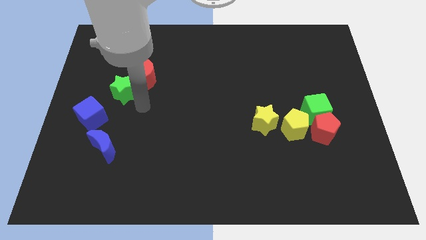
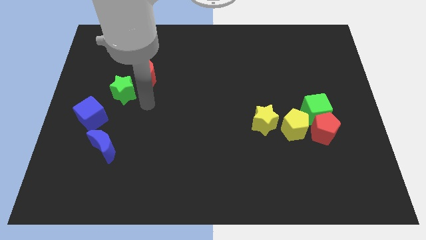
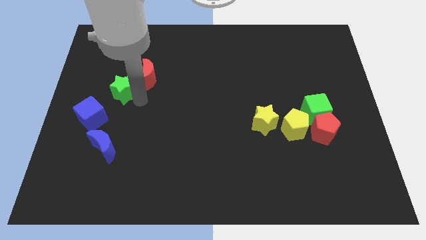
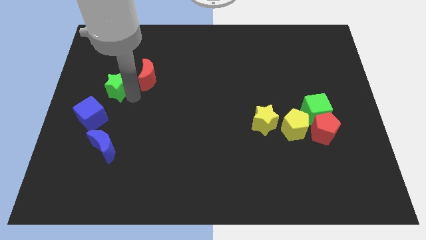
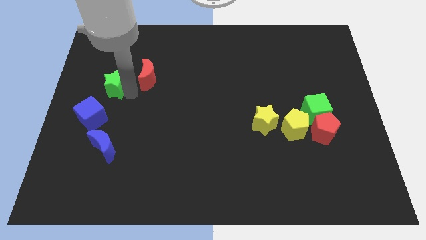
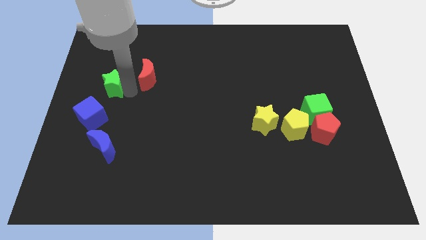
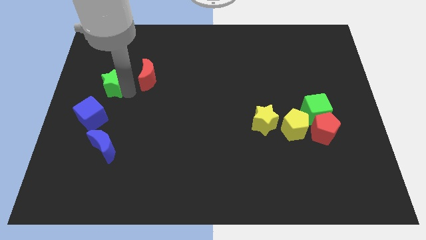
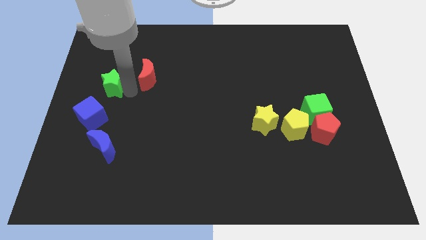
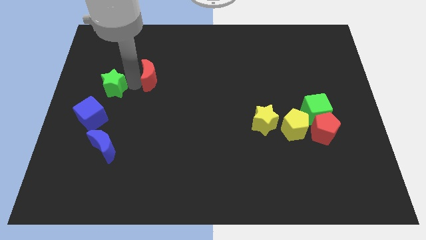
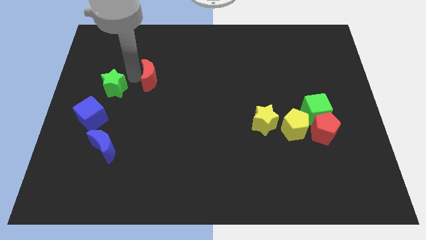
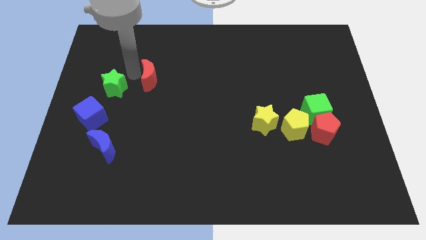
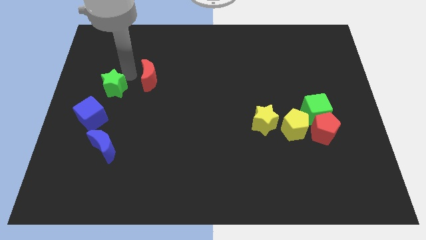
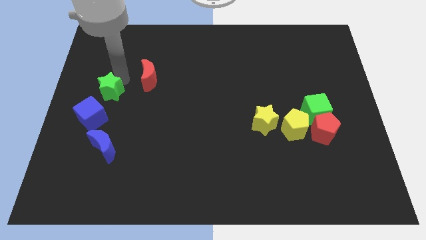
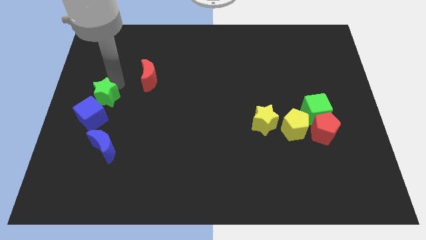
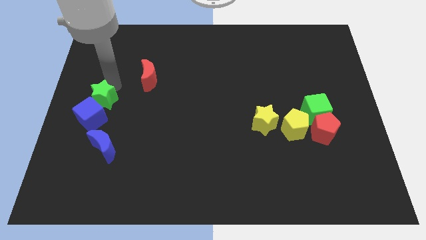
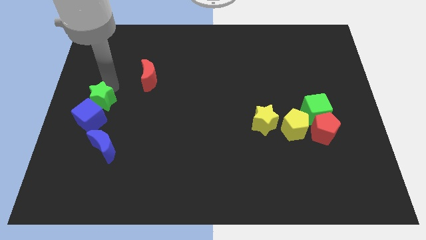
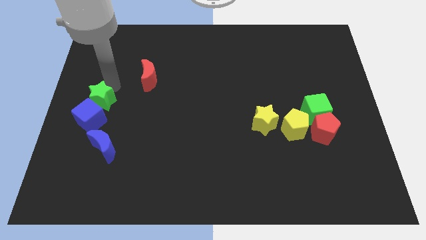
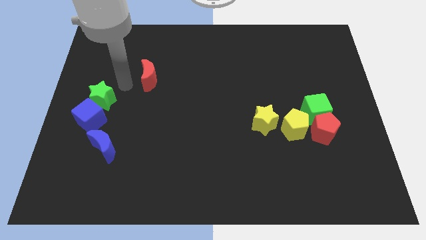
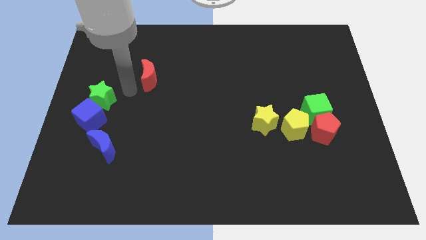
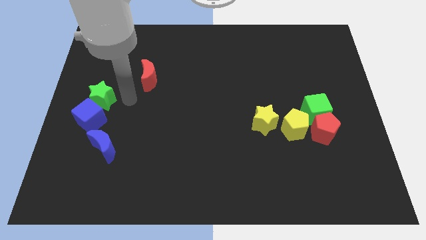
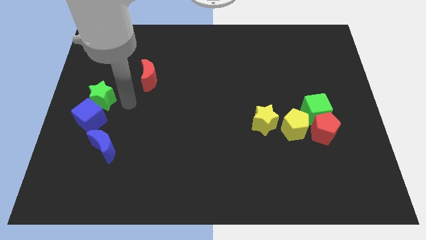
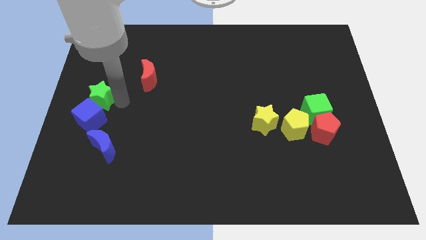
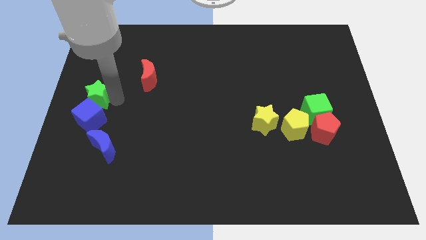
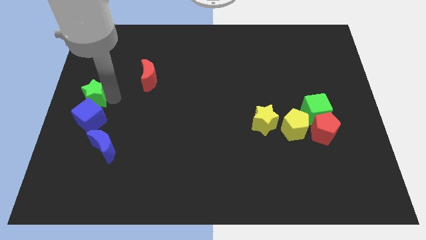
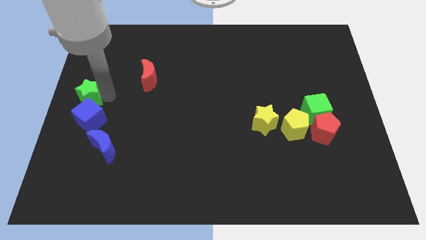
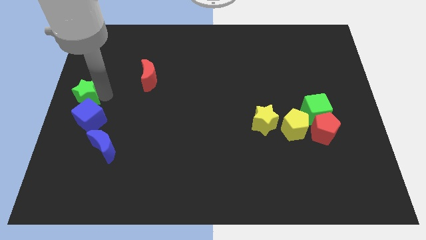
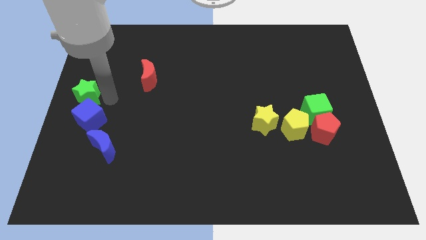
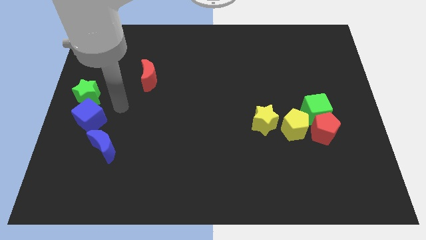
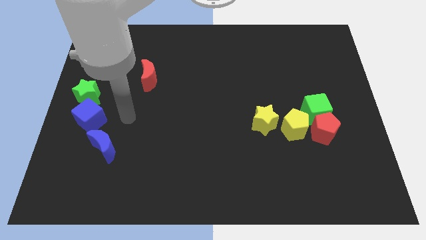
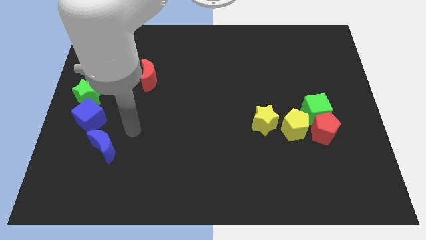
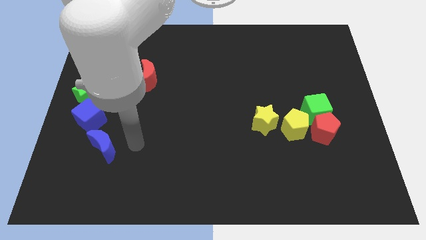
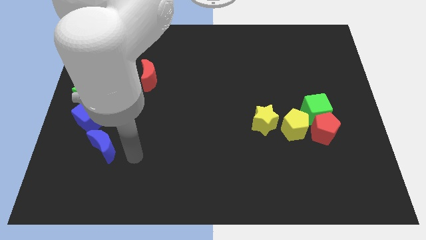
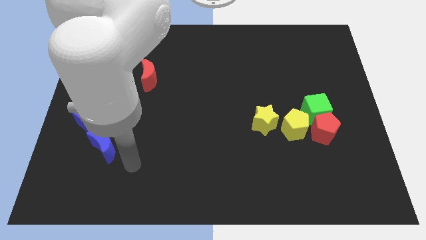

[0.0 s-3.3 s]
move the green star above the blue cube

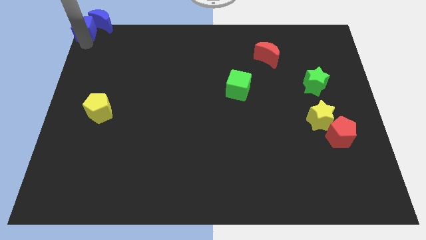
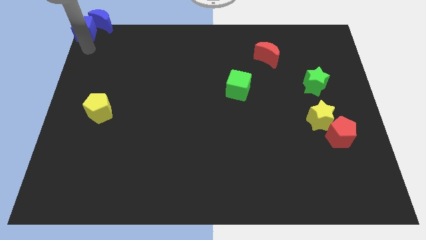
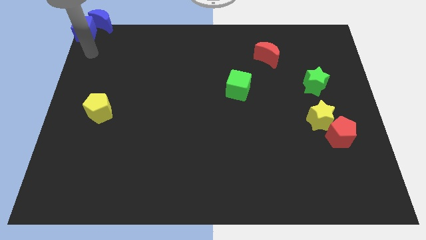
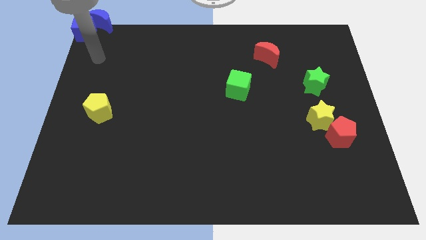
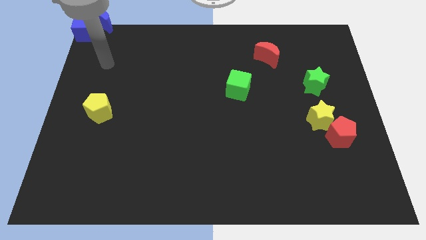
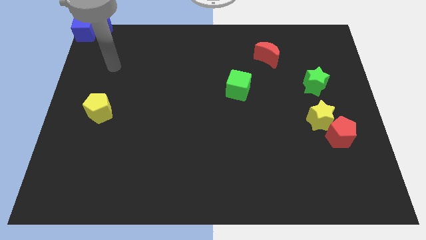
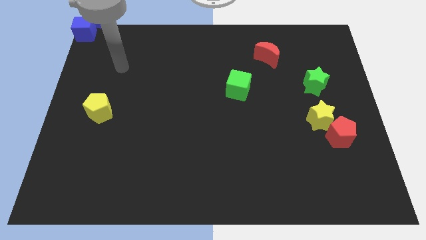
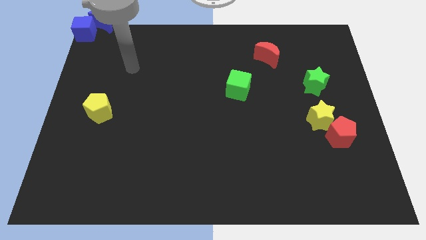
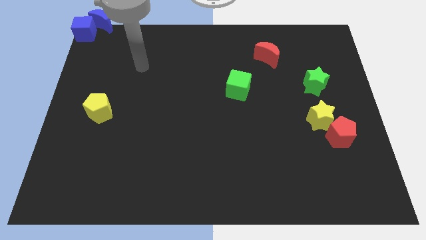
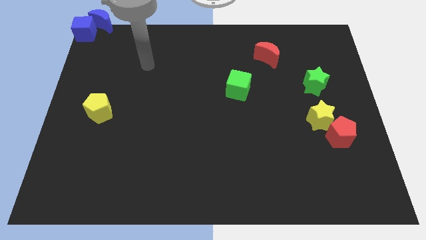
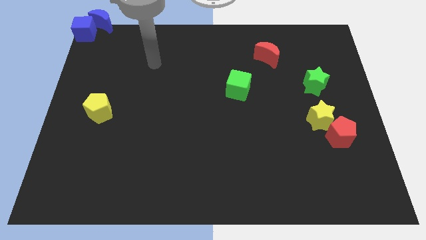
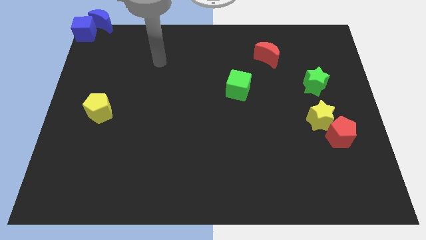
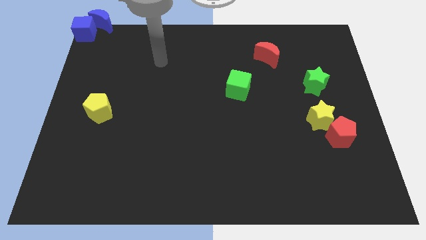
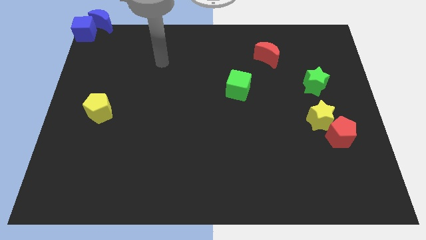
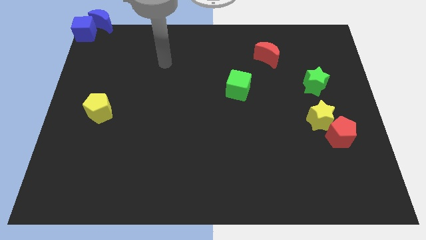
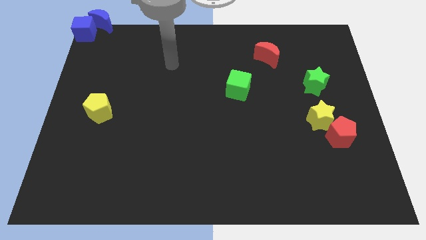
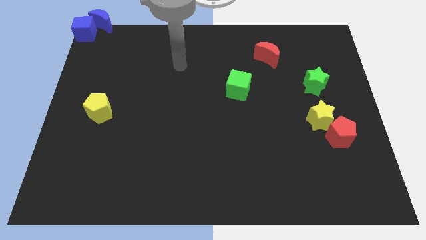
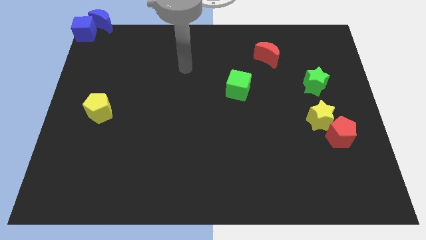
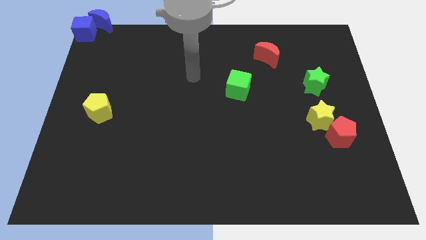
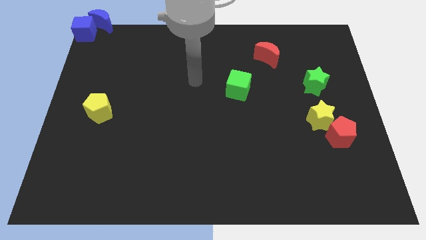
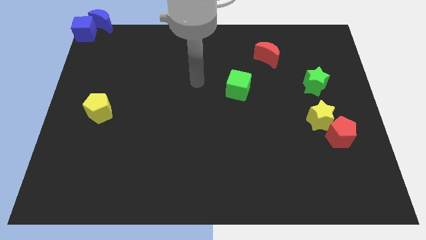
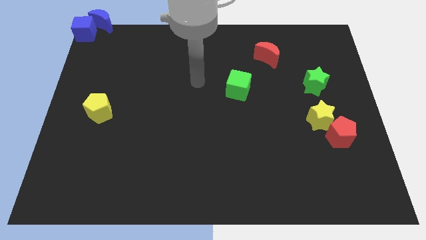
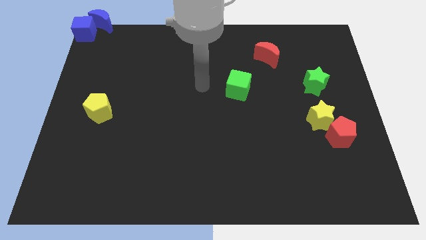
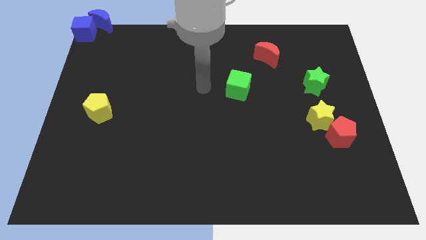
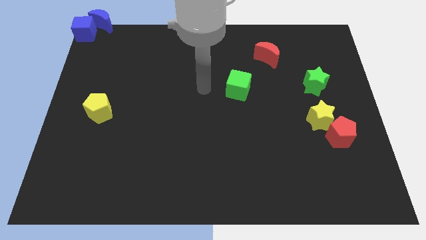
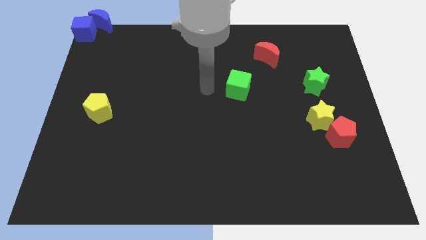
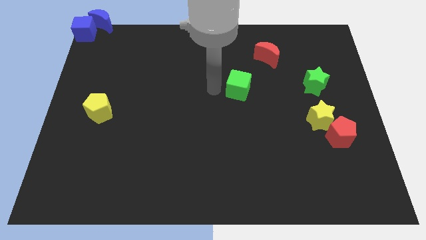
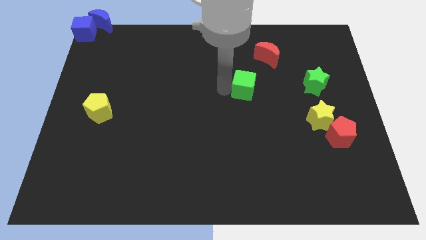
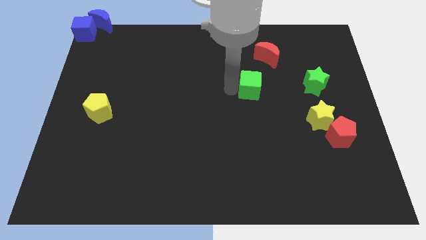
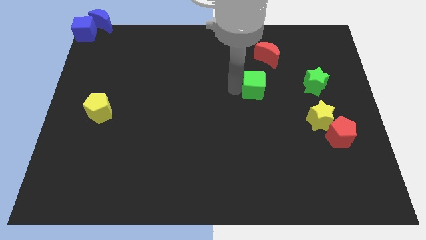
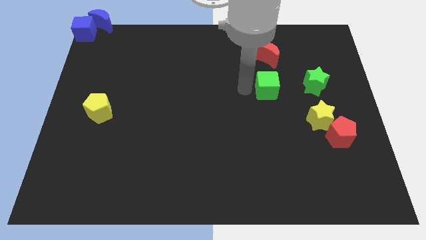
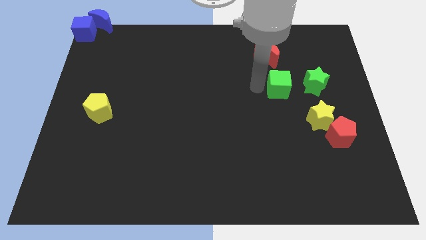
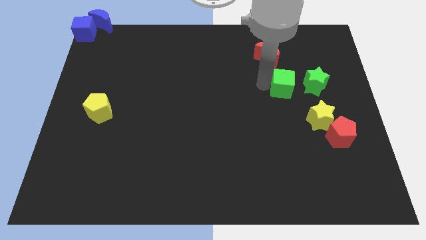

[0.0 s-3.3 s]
push the green cube towards the green star

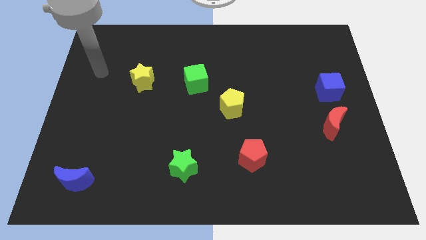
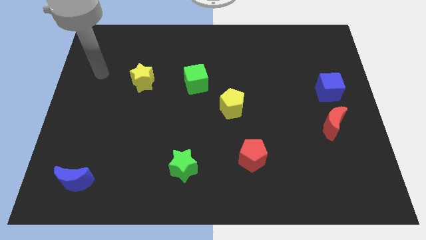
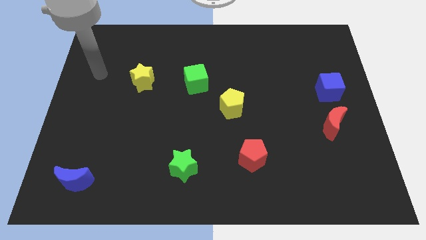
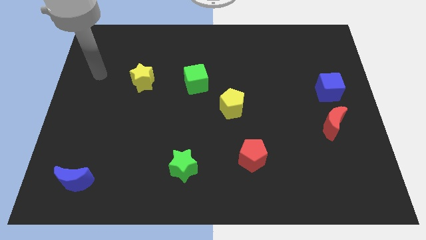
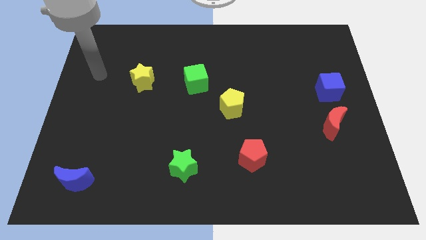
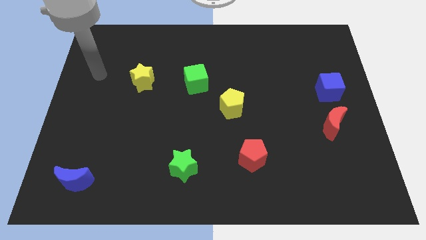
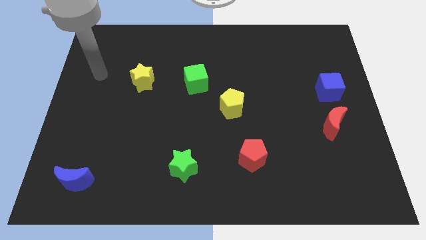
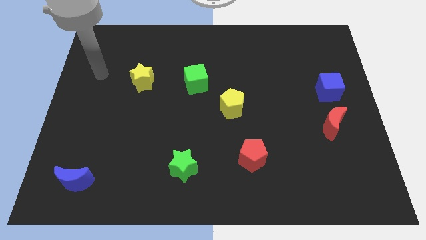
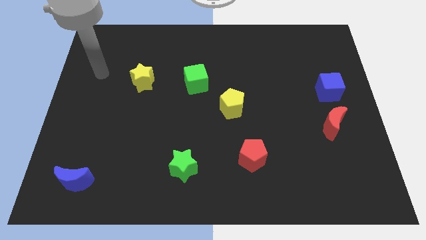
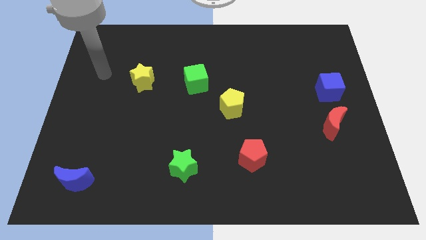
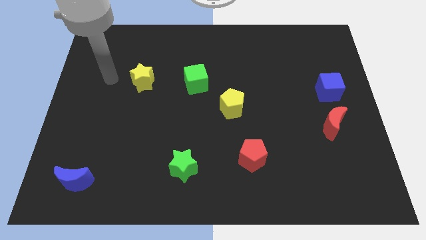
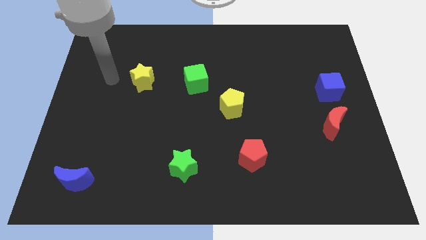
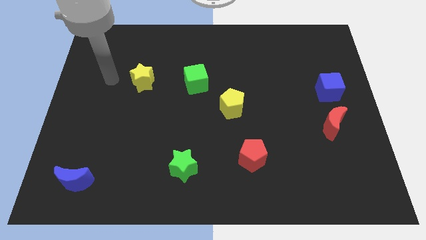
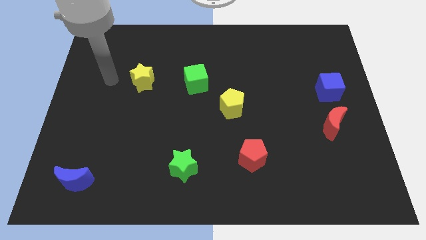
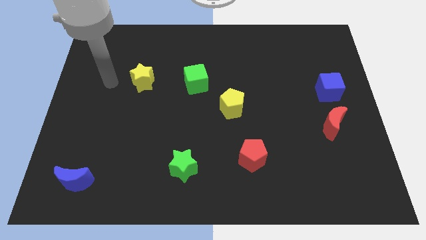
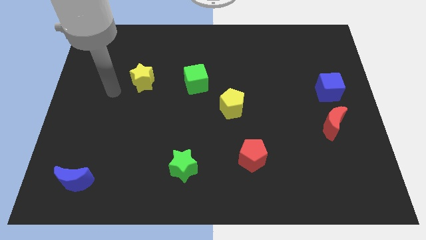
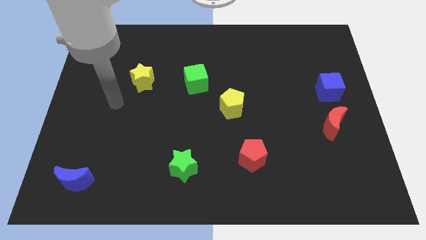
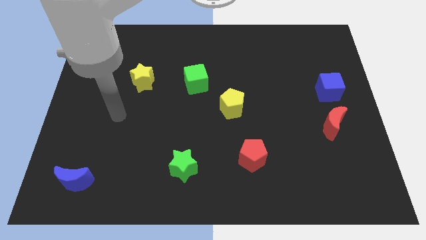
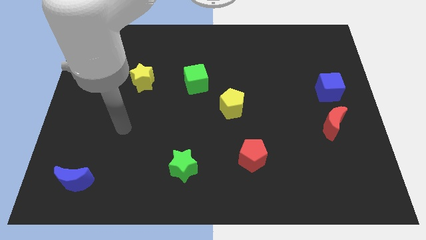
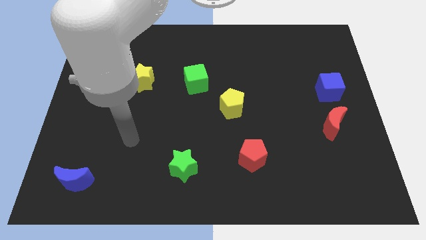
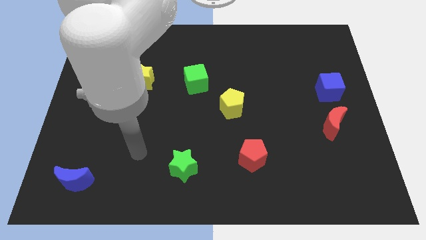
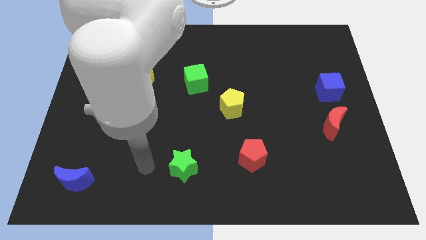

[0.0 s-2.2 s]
drag the pointer to the left of the green star

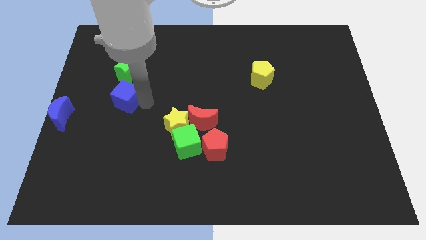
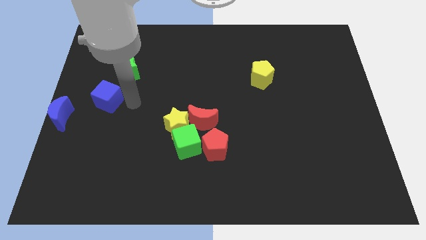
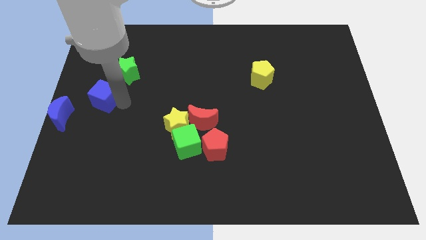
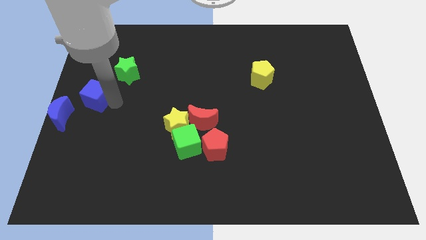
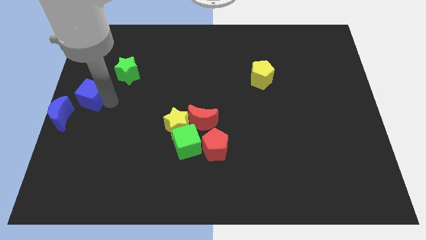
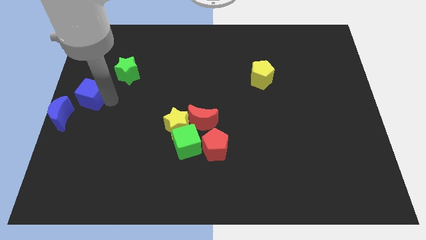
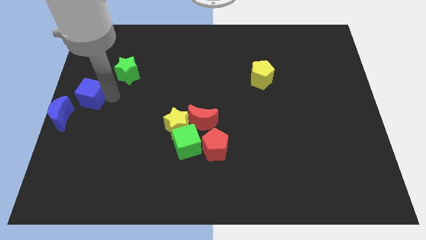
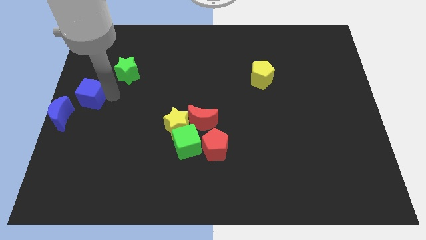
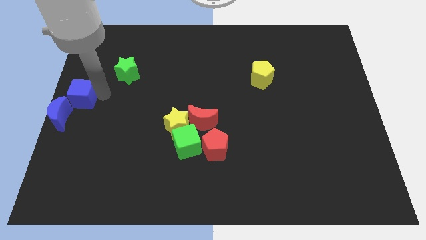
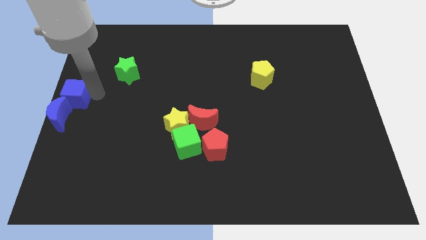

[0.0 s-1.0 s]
push the blue cube into the blue crescent
